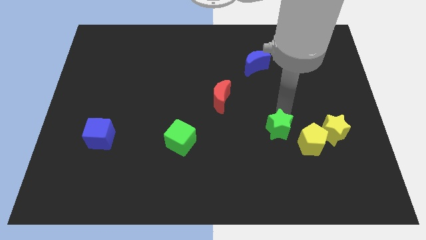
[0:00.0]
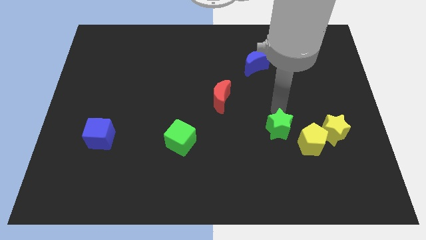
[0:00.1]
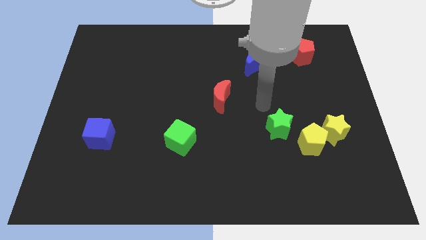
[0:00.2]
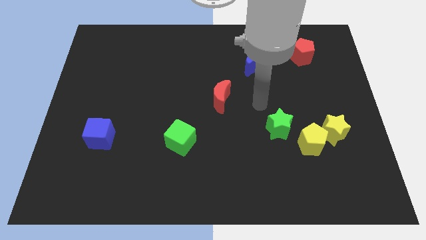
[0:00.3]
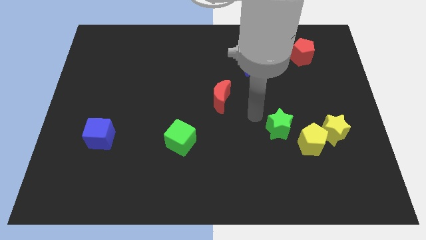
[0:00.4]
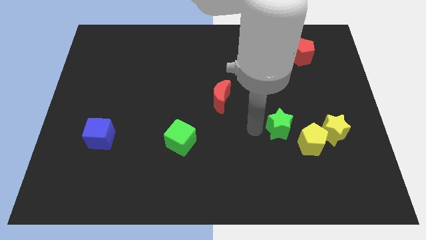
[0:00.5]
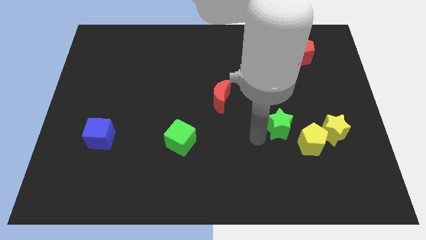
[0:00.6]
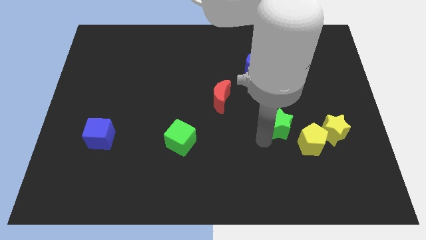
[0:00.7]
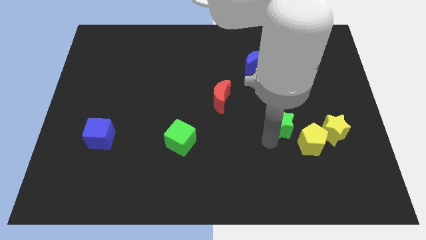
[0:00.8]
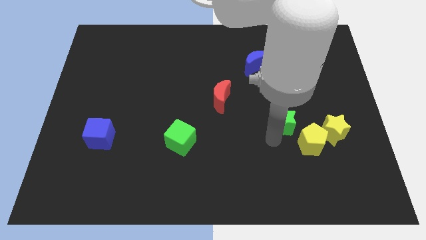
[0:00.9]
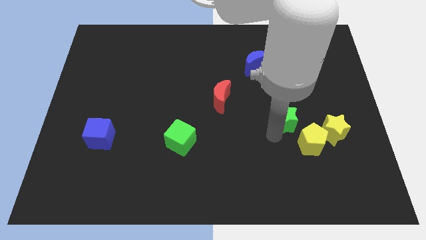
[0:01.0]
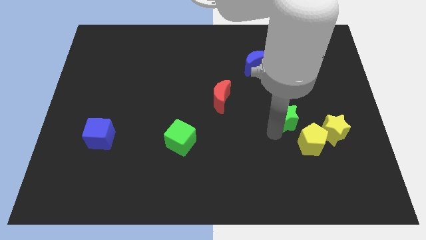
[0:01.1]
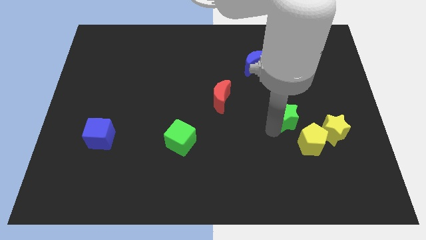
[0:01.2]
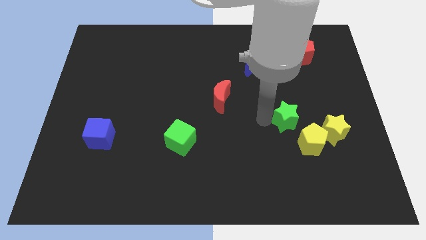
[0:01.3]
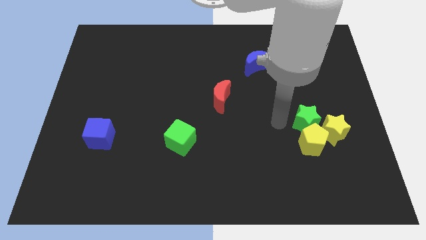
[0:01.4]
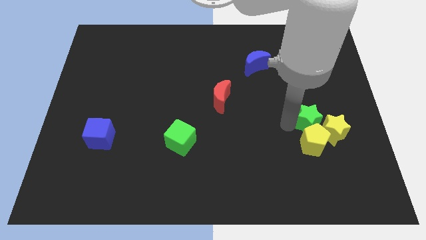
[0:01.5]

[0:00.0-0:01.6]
push the green star into the top side of the yellow pentagon

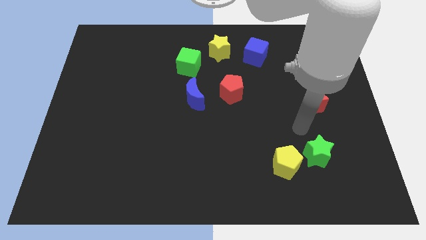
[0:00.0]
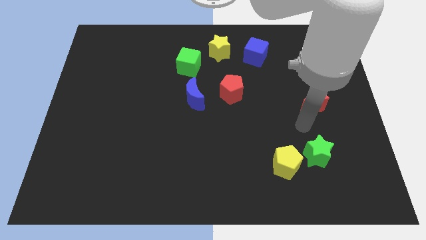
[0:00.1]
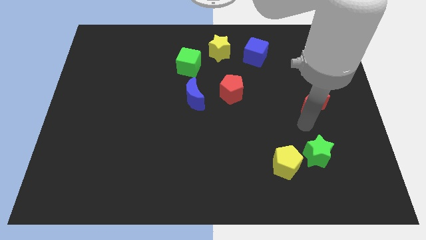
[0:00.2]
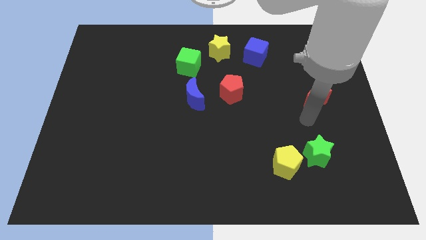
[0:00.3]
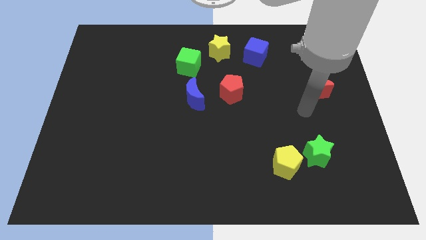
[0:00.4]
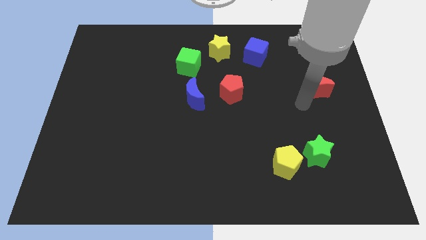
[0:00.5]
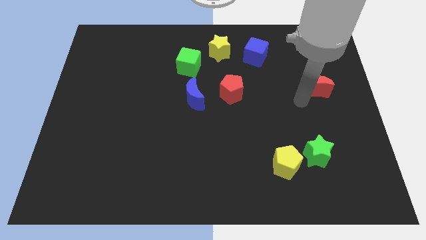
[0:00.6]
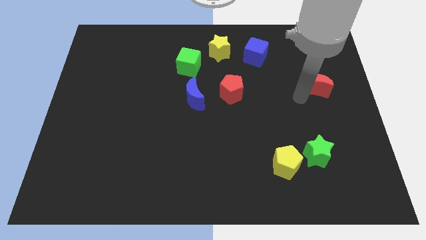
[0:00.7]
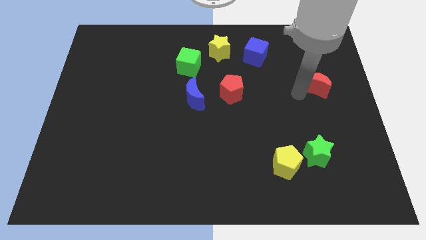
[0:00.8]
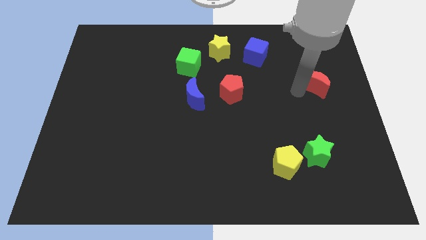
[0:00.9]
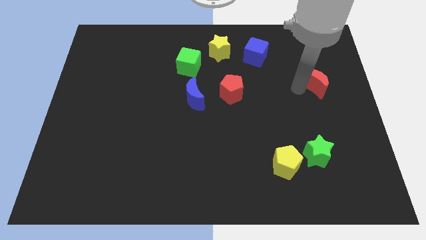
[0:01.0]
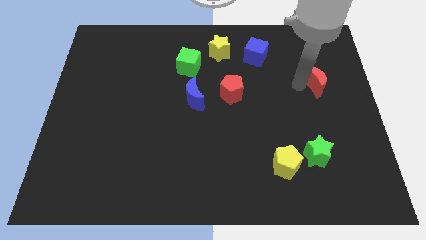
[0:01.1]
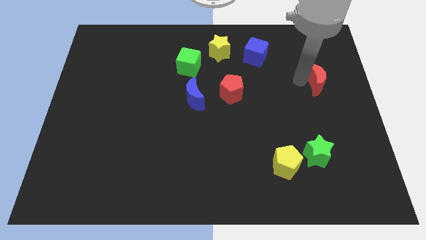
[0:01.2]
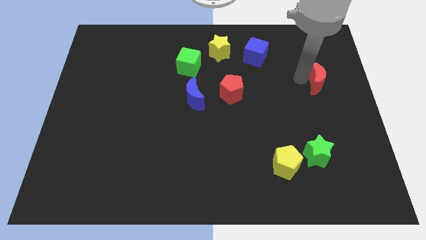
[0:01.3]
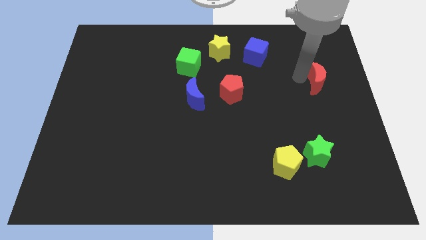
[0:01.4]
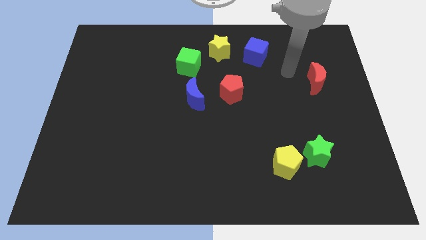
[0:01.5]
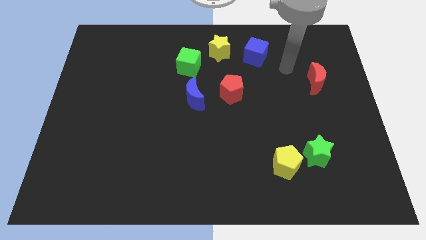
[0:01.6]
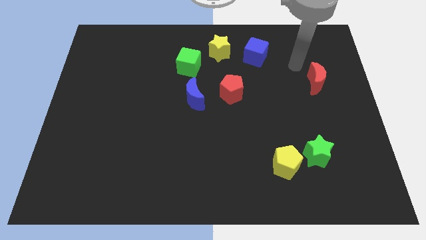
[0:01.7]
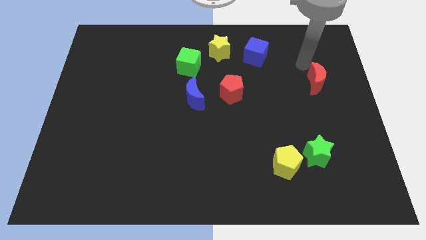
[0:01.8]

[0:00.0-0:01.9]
push red crescent upwards

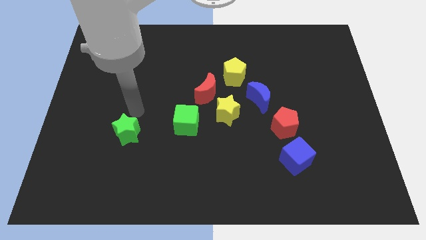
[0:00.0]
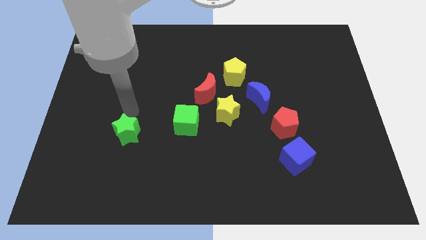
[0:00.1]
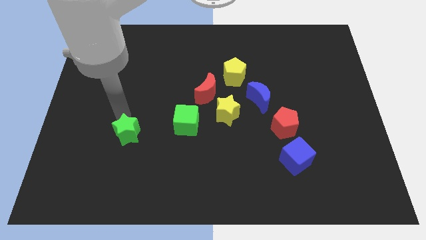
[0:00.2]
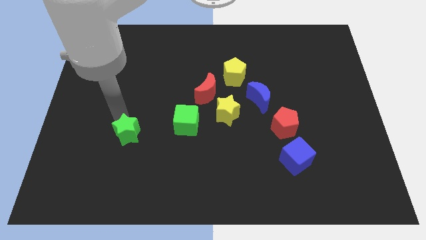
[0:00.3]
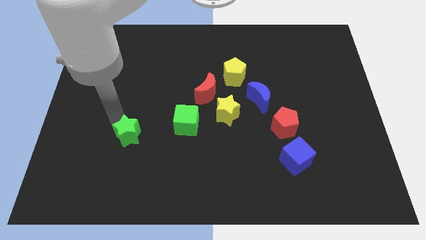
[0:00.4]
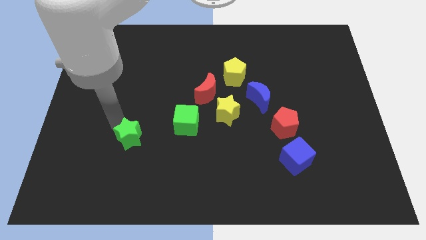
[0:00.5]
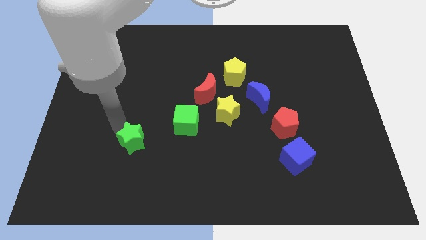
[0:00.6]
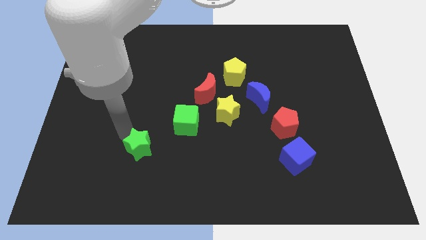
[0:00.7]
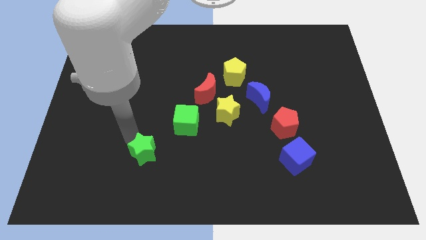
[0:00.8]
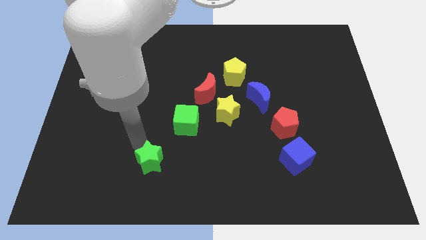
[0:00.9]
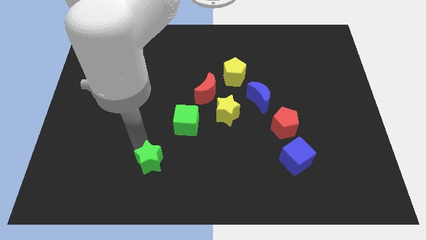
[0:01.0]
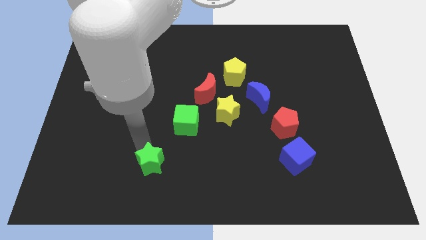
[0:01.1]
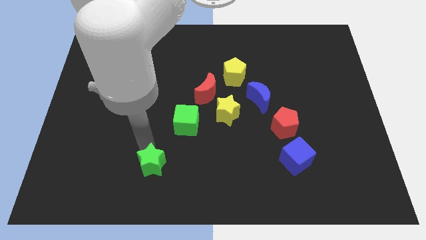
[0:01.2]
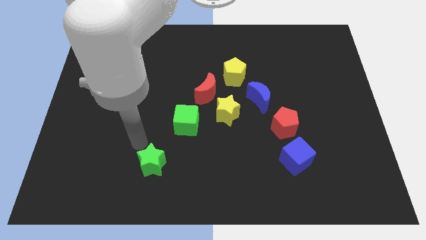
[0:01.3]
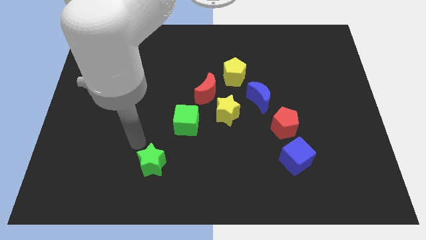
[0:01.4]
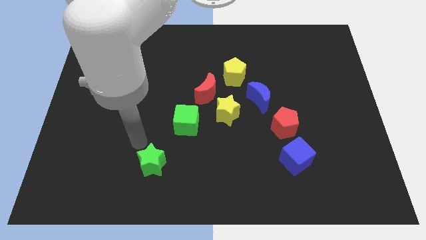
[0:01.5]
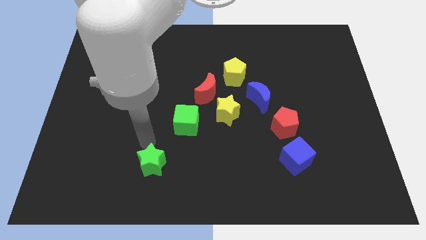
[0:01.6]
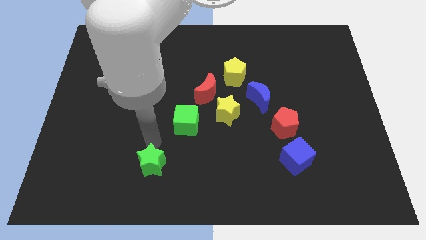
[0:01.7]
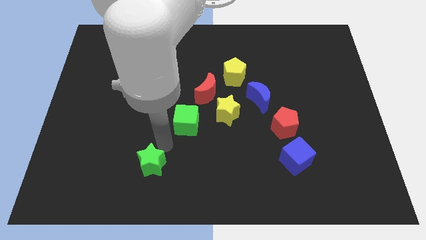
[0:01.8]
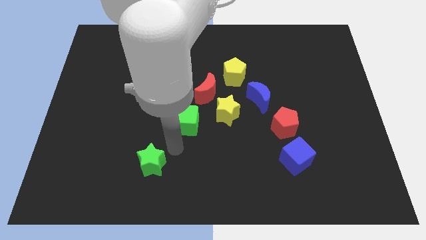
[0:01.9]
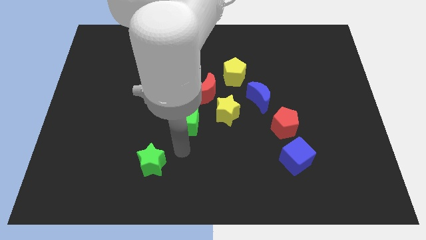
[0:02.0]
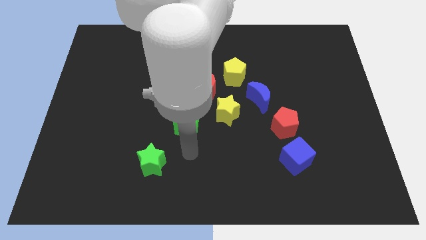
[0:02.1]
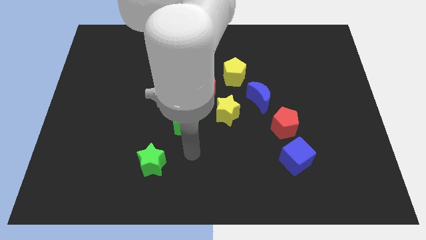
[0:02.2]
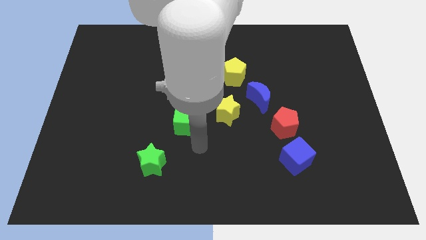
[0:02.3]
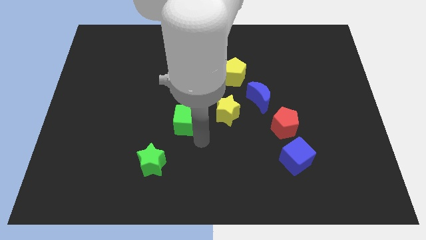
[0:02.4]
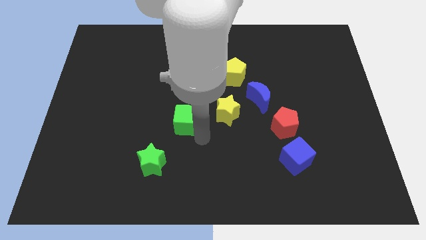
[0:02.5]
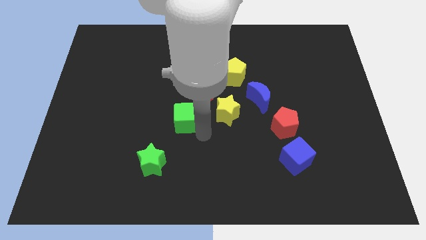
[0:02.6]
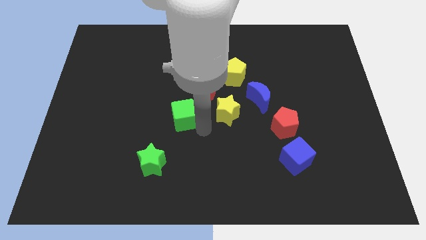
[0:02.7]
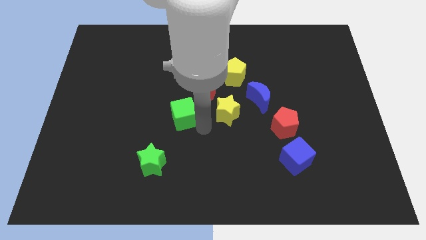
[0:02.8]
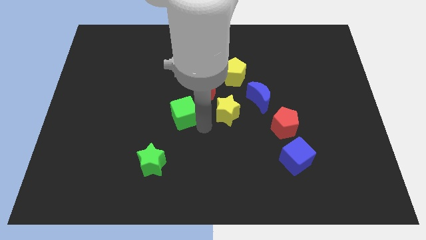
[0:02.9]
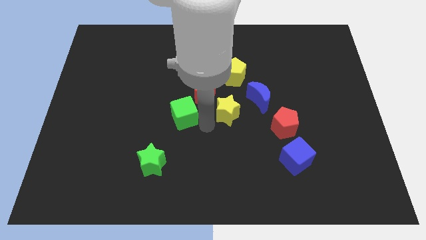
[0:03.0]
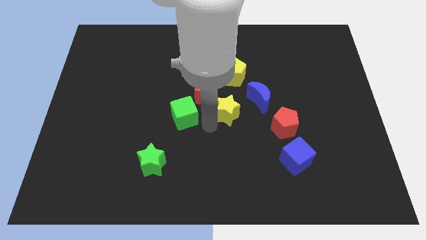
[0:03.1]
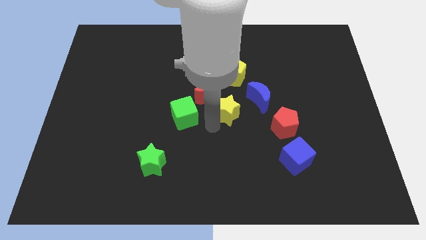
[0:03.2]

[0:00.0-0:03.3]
move the green star to the left bottom of the board

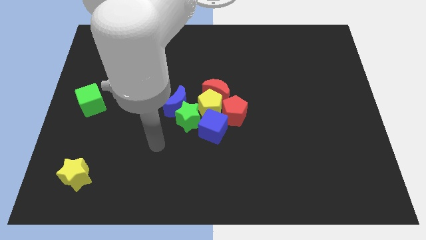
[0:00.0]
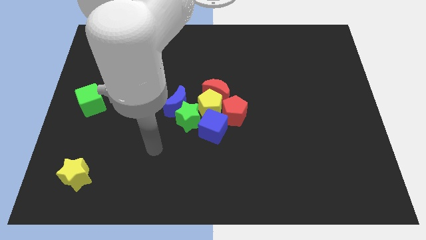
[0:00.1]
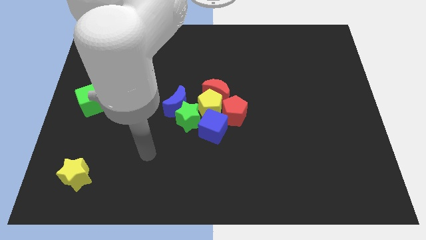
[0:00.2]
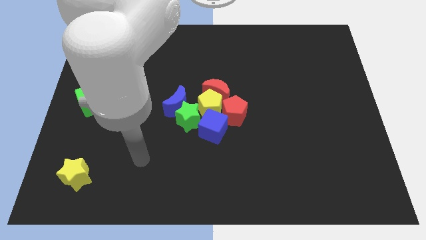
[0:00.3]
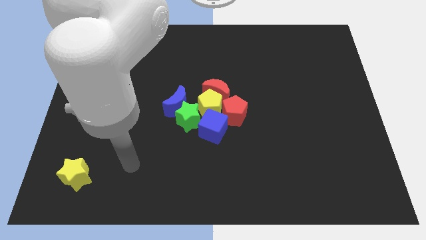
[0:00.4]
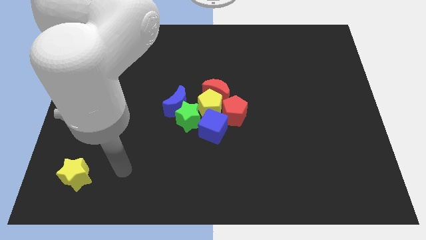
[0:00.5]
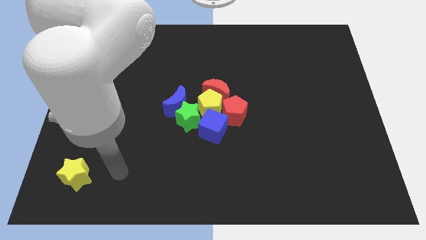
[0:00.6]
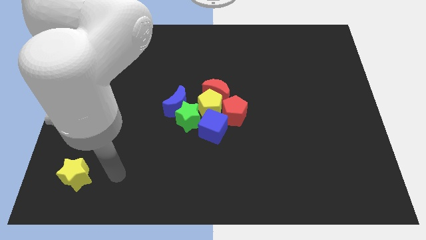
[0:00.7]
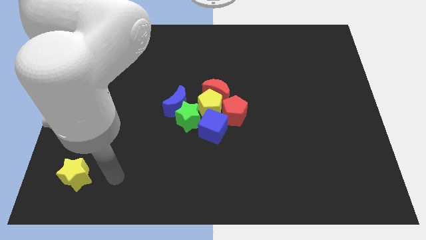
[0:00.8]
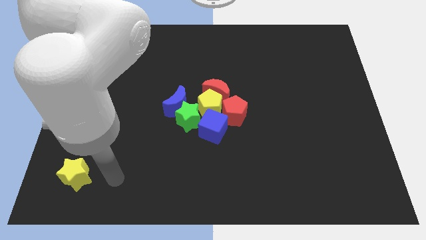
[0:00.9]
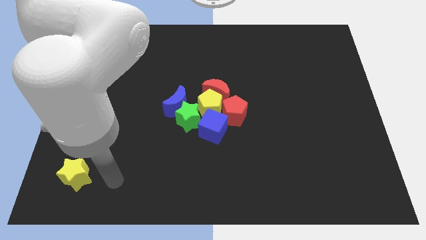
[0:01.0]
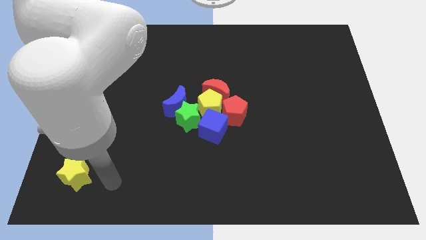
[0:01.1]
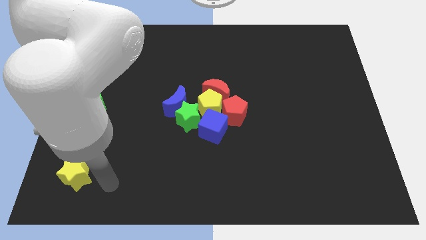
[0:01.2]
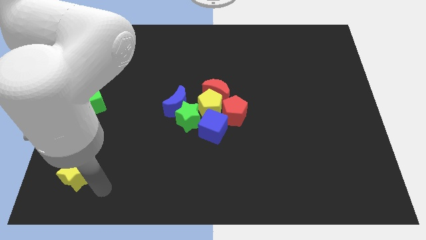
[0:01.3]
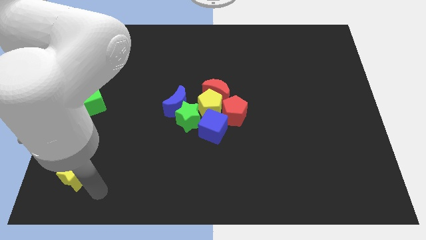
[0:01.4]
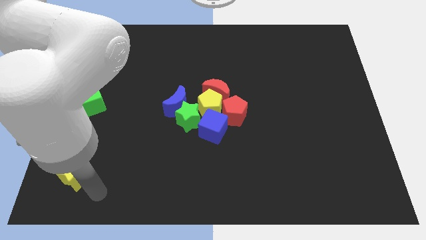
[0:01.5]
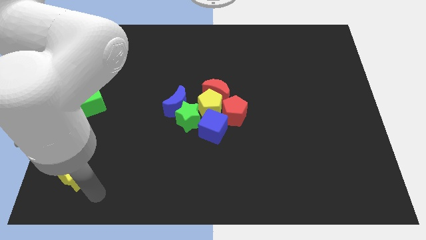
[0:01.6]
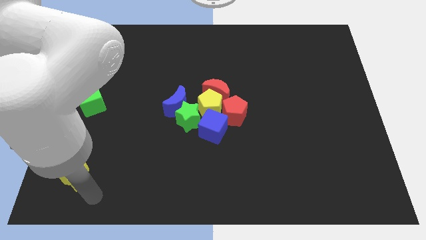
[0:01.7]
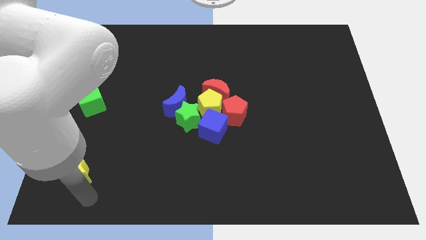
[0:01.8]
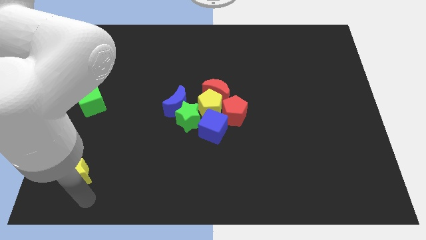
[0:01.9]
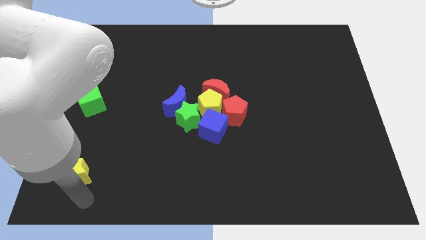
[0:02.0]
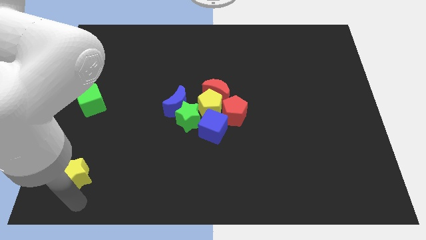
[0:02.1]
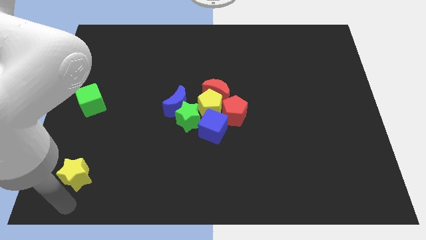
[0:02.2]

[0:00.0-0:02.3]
point your arm at the bottom of the yellow star
